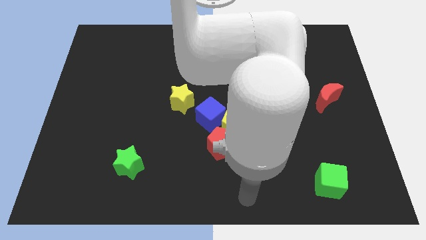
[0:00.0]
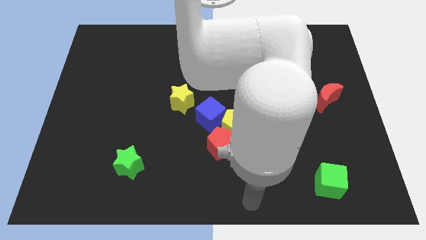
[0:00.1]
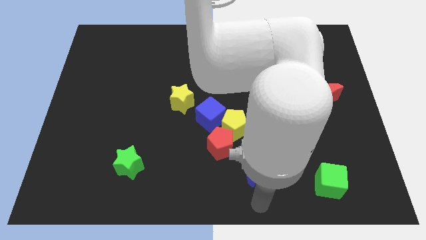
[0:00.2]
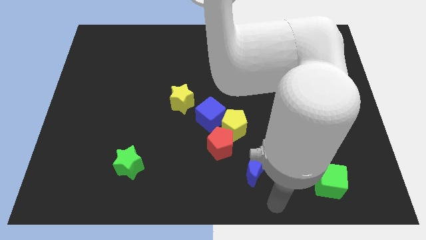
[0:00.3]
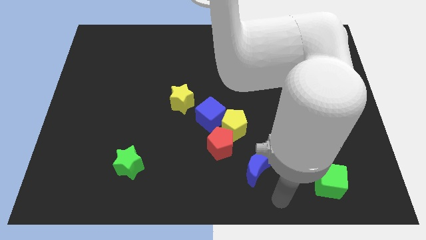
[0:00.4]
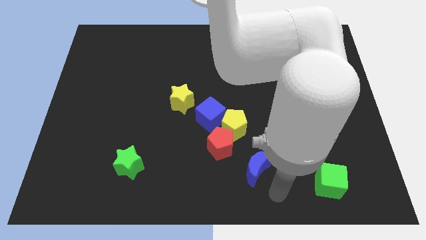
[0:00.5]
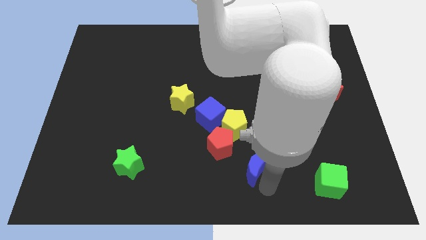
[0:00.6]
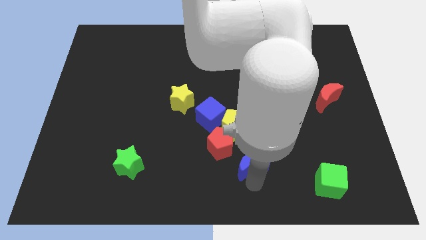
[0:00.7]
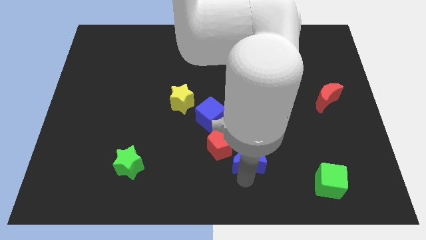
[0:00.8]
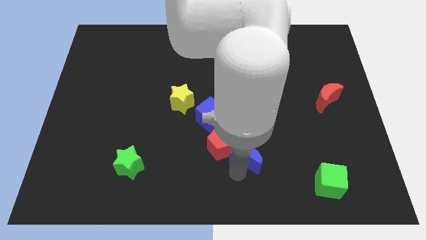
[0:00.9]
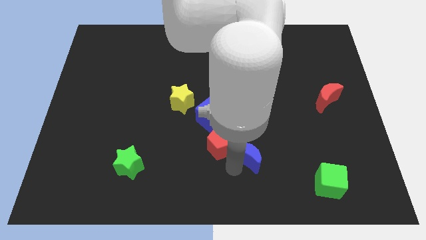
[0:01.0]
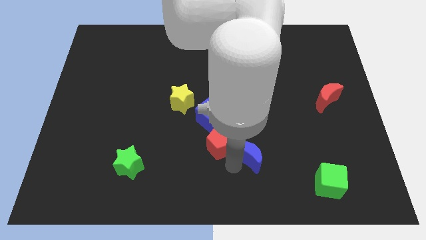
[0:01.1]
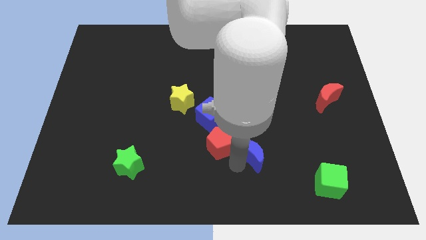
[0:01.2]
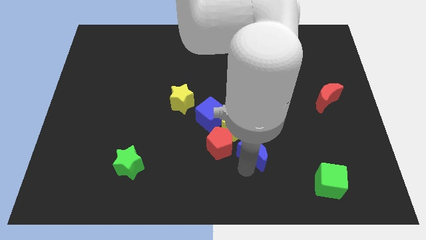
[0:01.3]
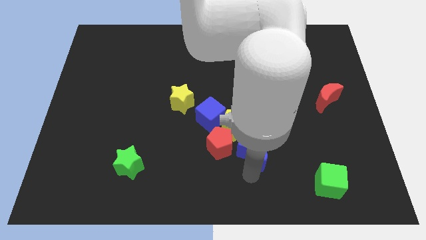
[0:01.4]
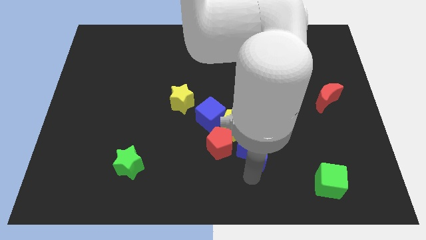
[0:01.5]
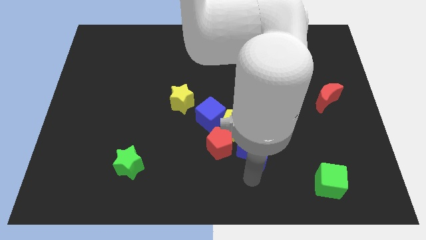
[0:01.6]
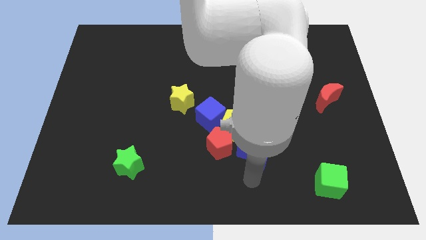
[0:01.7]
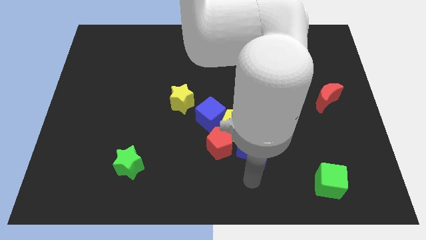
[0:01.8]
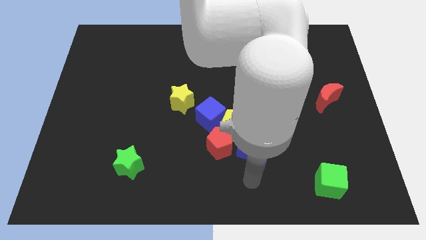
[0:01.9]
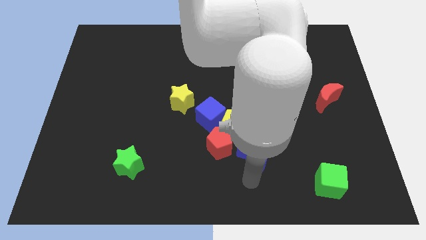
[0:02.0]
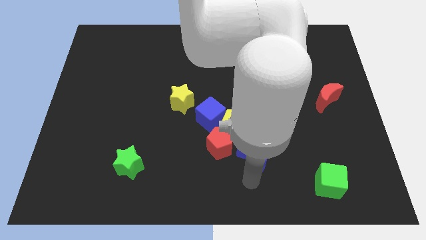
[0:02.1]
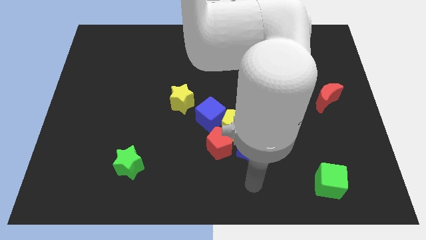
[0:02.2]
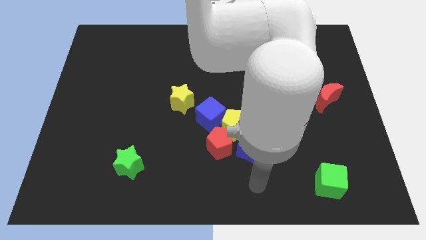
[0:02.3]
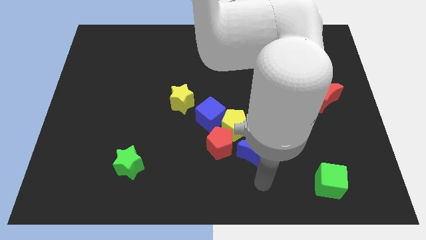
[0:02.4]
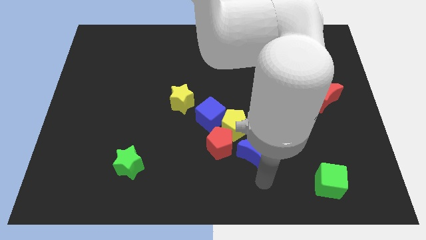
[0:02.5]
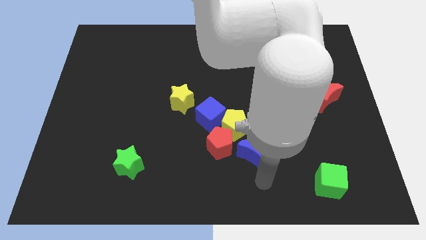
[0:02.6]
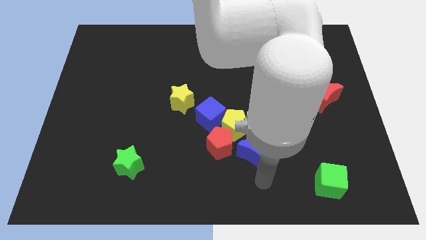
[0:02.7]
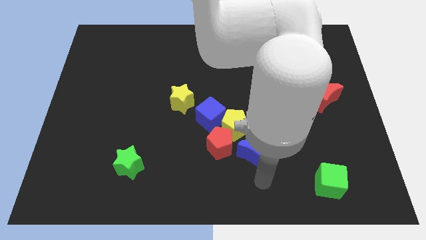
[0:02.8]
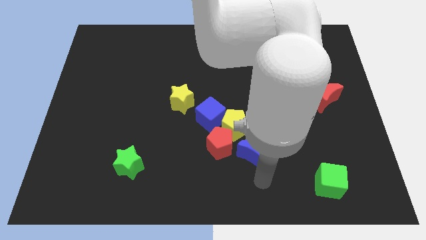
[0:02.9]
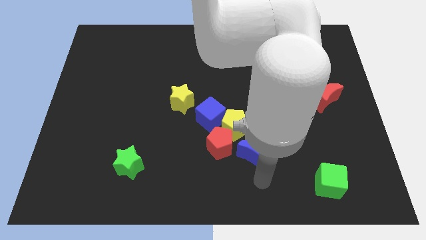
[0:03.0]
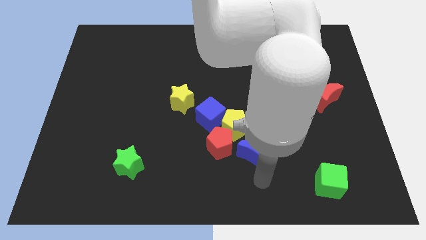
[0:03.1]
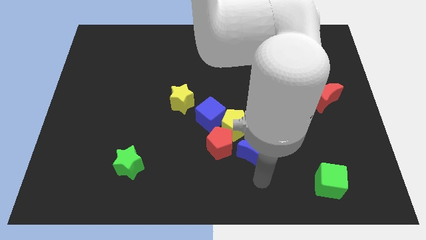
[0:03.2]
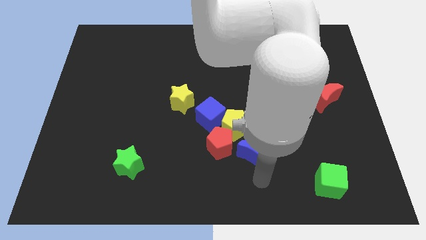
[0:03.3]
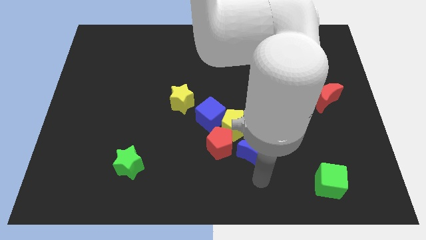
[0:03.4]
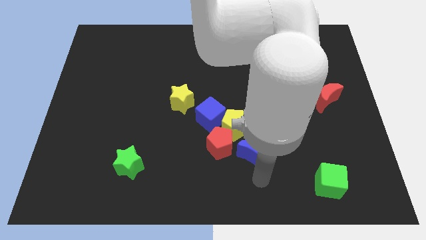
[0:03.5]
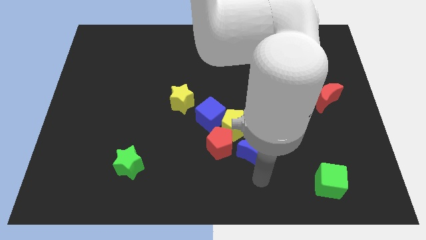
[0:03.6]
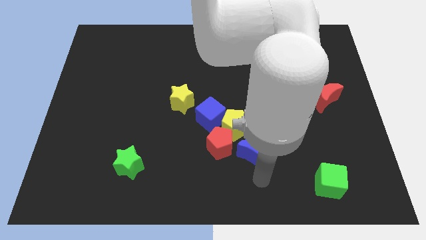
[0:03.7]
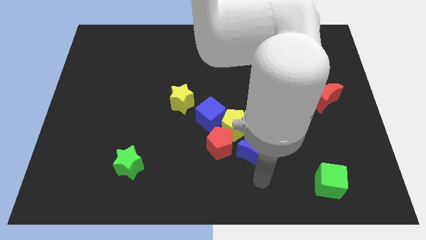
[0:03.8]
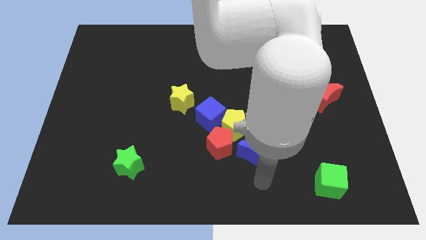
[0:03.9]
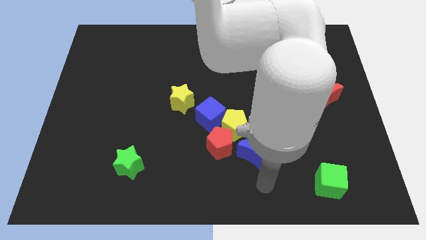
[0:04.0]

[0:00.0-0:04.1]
move blue moon slightly up

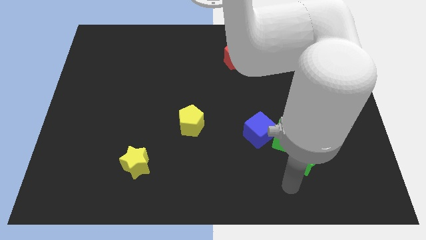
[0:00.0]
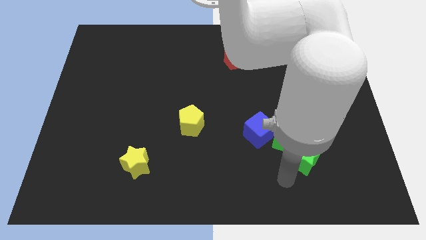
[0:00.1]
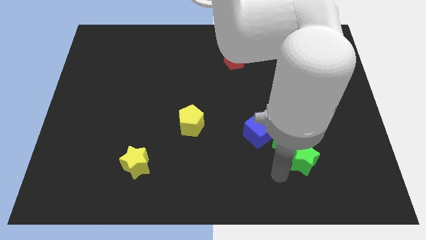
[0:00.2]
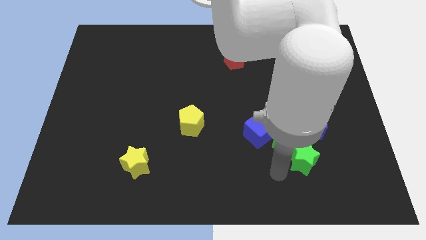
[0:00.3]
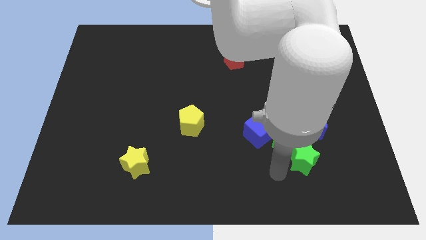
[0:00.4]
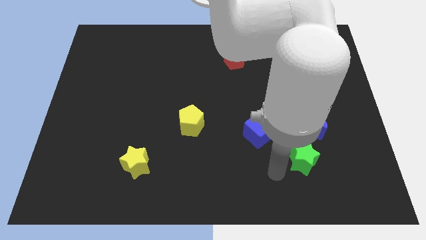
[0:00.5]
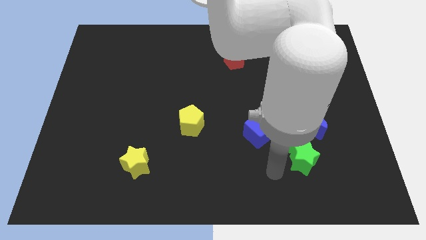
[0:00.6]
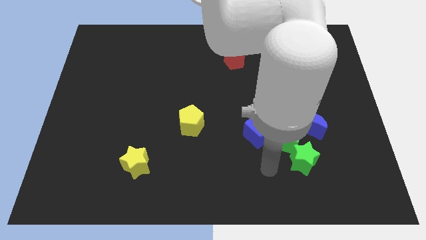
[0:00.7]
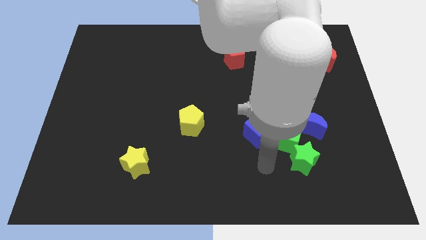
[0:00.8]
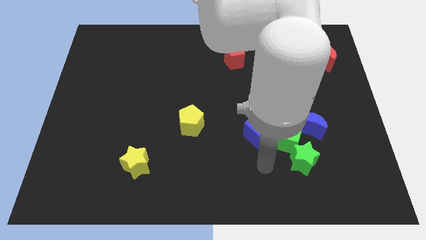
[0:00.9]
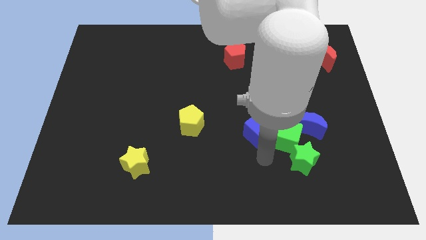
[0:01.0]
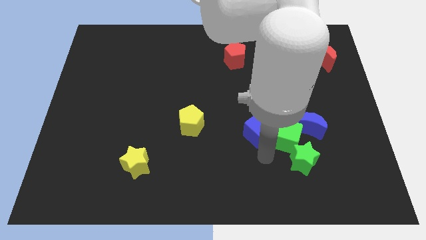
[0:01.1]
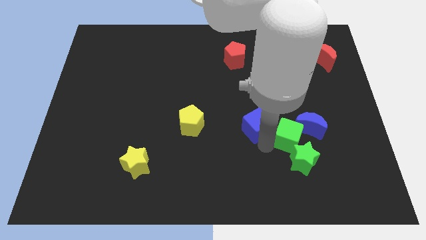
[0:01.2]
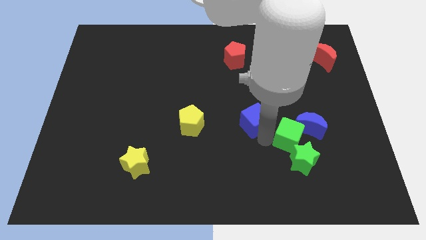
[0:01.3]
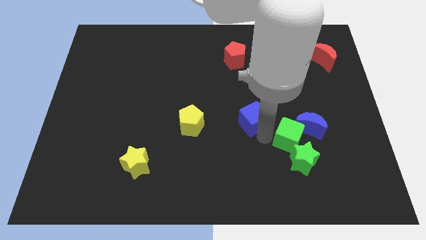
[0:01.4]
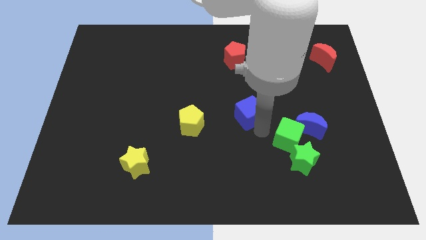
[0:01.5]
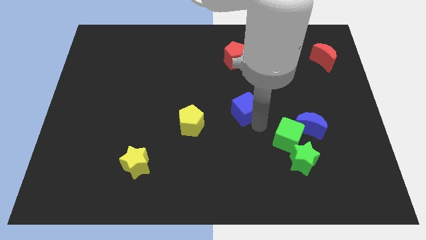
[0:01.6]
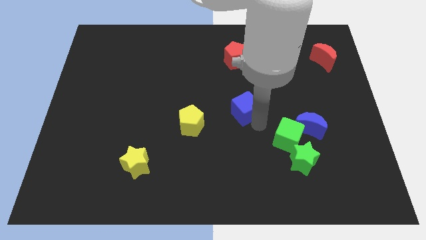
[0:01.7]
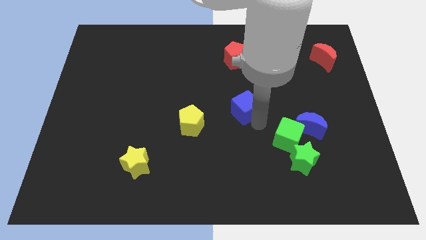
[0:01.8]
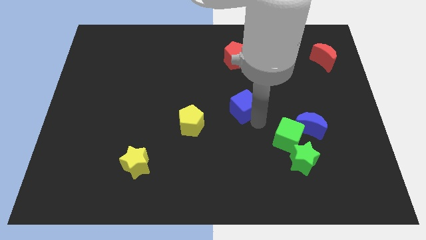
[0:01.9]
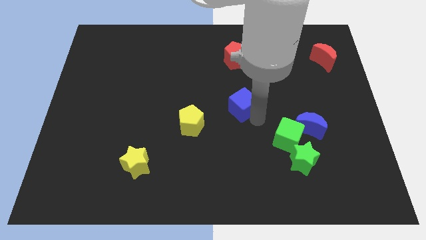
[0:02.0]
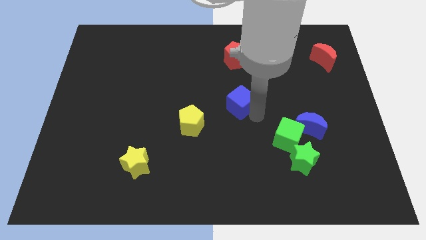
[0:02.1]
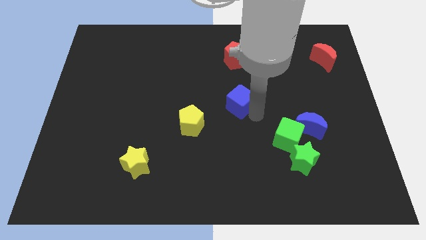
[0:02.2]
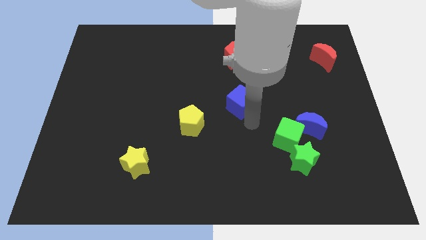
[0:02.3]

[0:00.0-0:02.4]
place the blue cube diagonally top right to the yellow pentagon

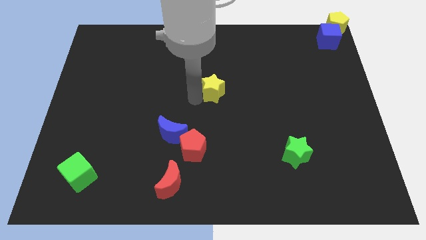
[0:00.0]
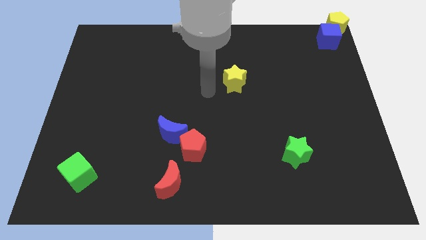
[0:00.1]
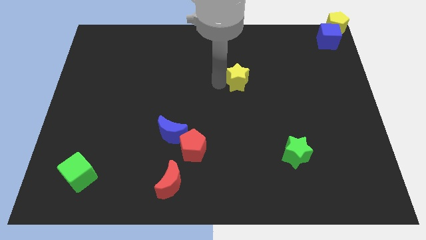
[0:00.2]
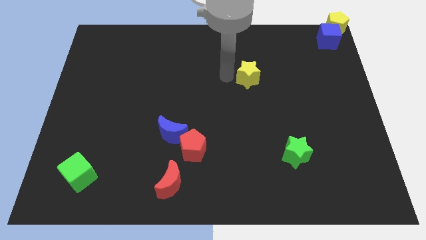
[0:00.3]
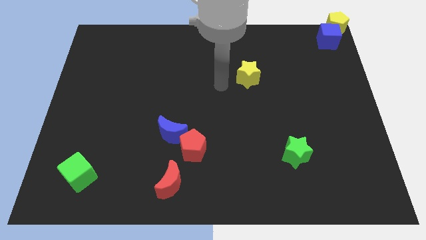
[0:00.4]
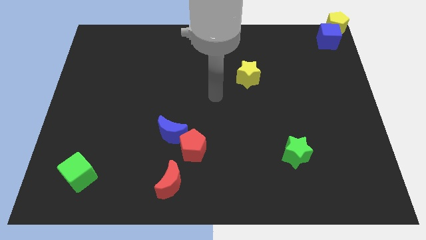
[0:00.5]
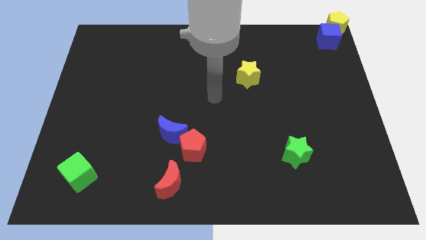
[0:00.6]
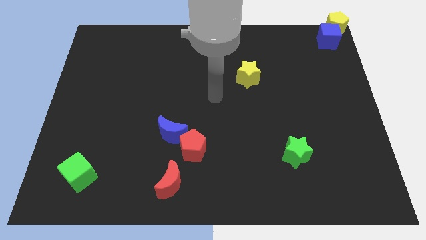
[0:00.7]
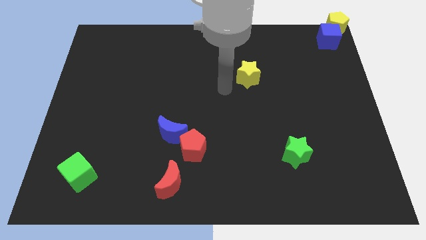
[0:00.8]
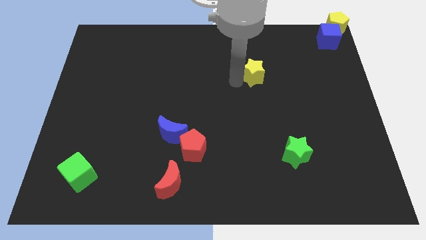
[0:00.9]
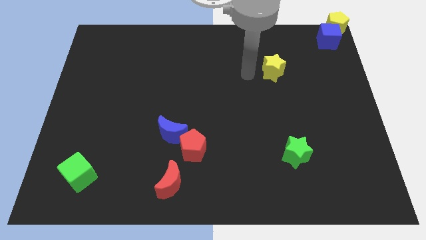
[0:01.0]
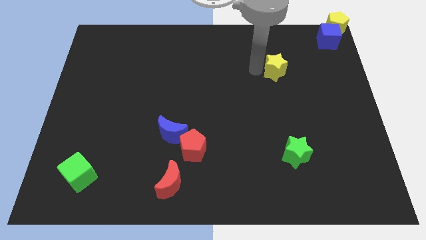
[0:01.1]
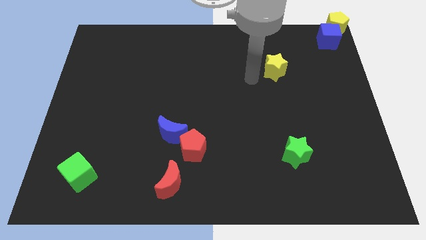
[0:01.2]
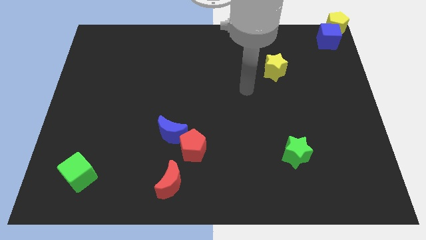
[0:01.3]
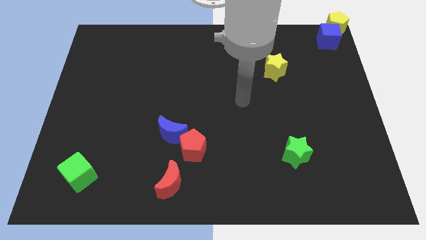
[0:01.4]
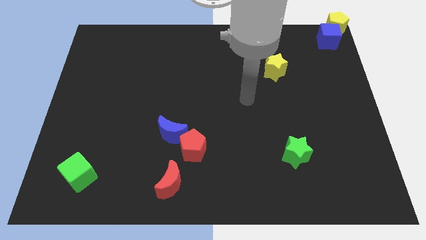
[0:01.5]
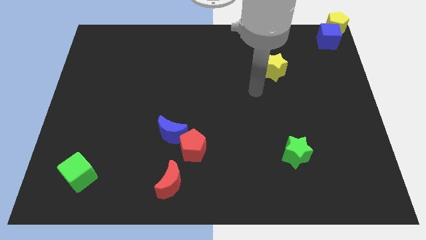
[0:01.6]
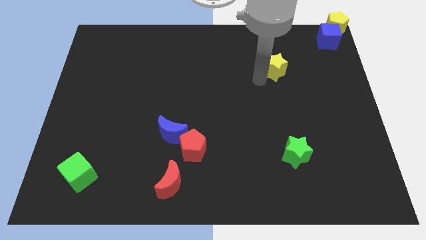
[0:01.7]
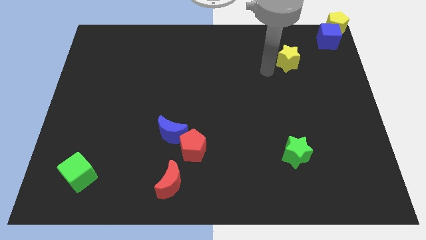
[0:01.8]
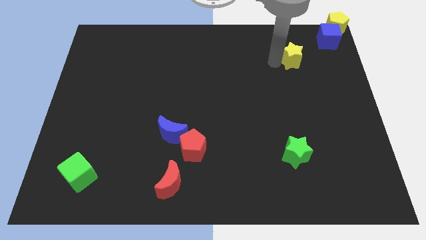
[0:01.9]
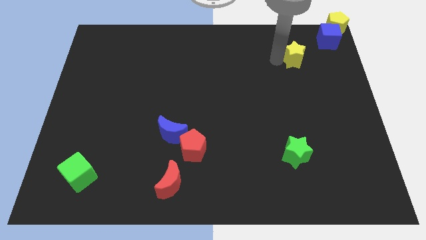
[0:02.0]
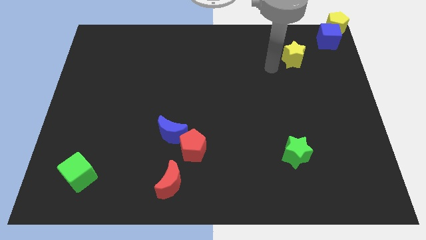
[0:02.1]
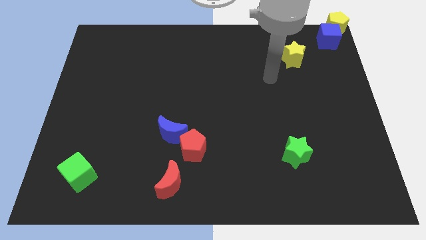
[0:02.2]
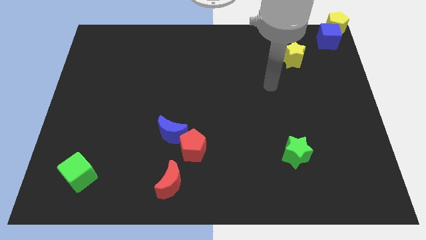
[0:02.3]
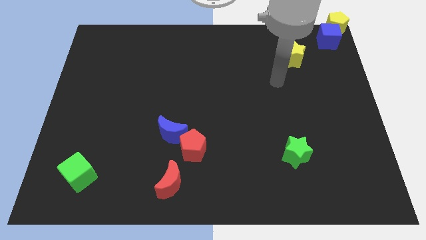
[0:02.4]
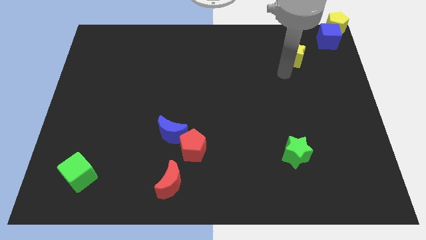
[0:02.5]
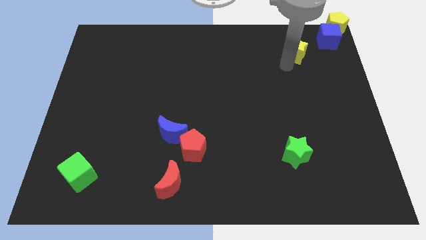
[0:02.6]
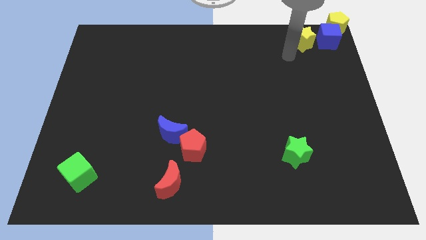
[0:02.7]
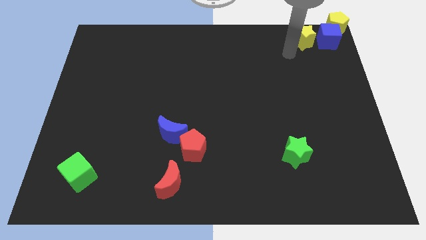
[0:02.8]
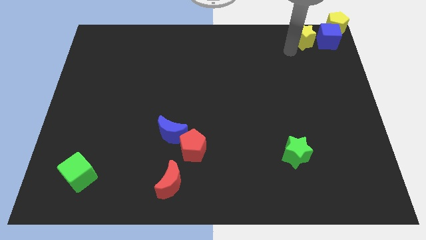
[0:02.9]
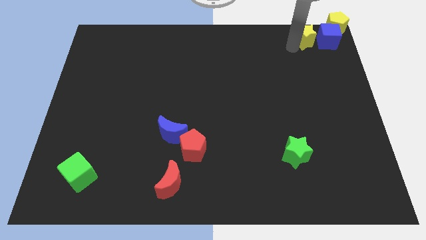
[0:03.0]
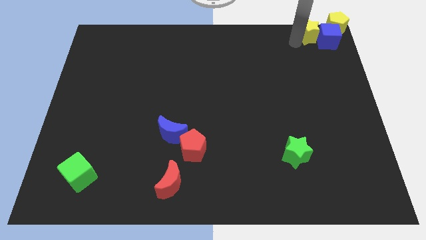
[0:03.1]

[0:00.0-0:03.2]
push yellow star close to the blue cube
